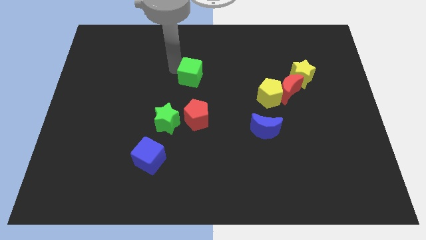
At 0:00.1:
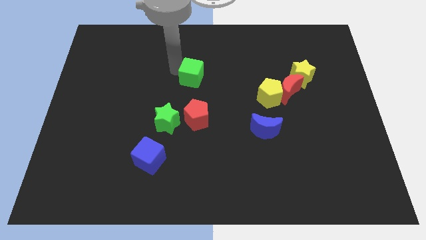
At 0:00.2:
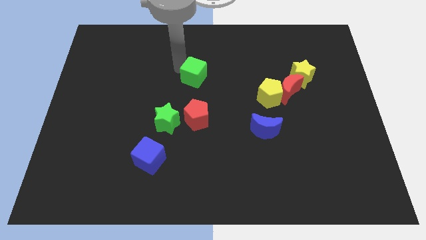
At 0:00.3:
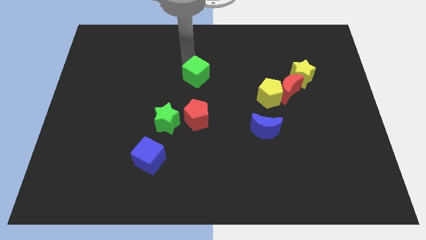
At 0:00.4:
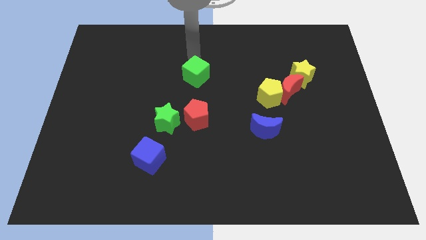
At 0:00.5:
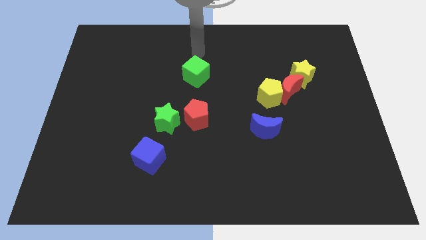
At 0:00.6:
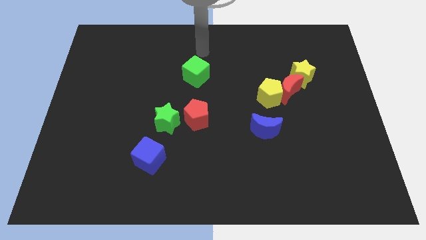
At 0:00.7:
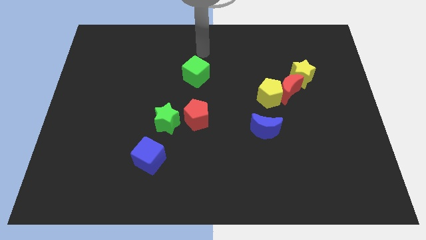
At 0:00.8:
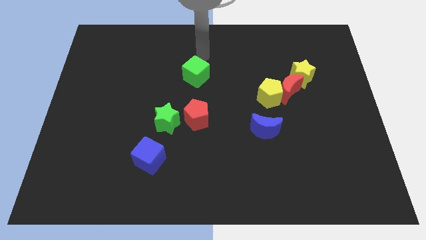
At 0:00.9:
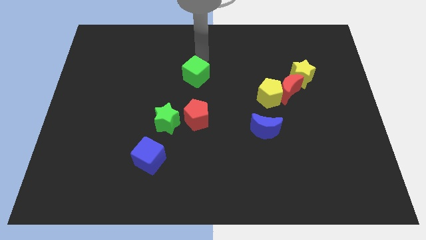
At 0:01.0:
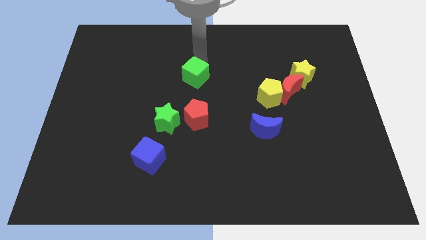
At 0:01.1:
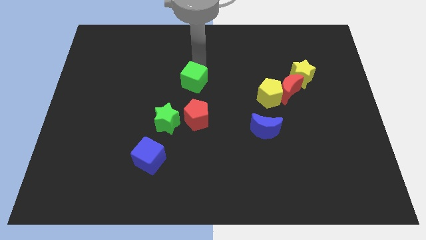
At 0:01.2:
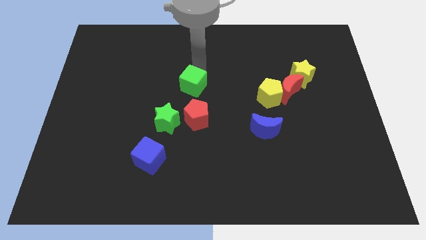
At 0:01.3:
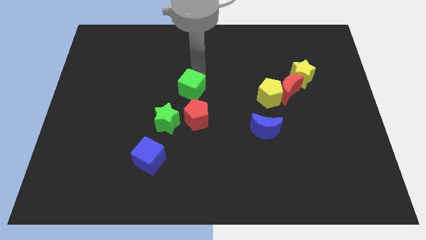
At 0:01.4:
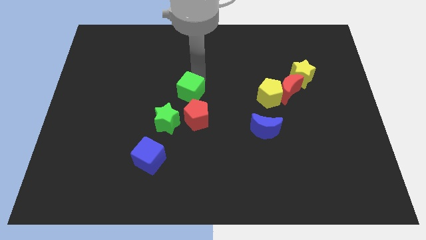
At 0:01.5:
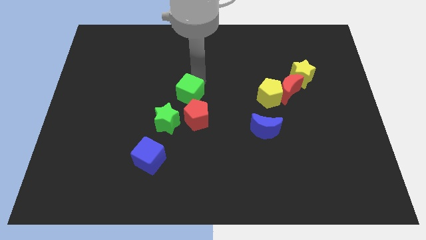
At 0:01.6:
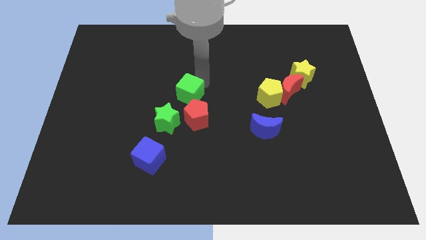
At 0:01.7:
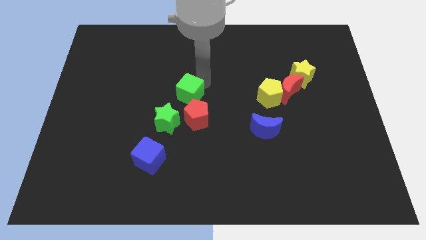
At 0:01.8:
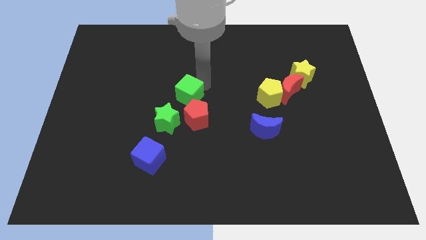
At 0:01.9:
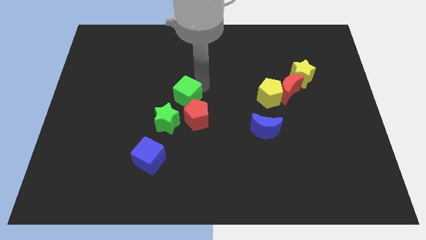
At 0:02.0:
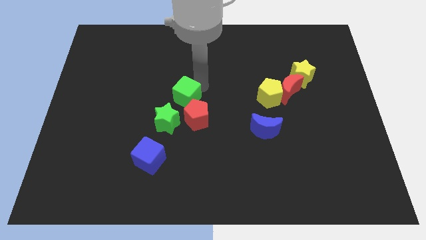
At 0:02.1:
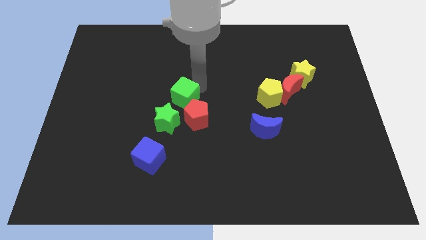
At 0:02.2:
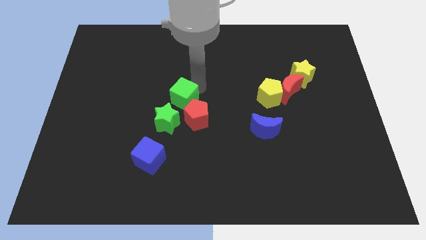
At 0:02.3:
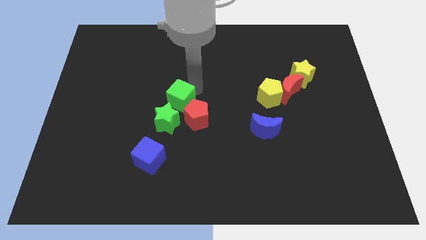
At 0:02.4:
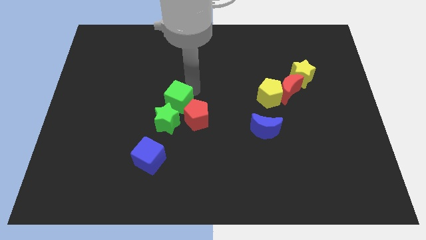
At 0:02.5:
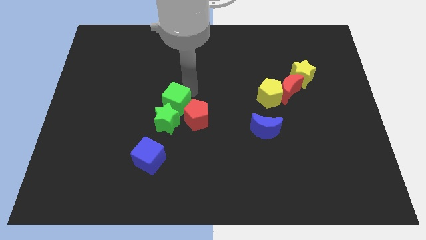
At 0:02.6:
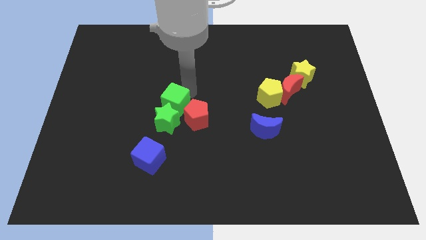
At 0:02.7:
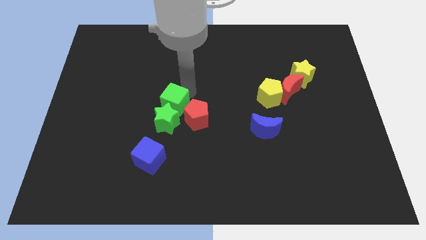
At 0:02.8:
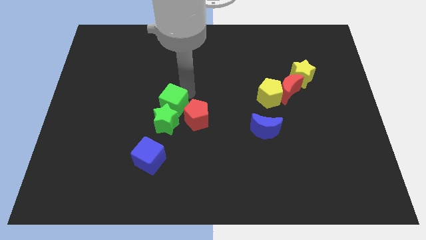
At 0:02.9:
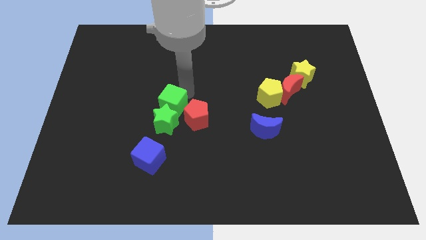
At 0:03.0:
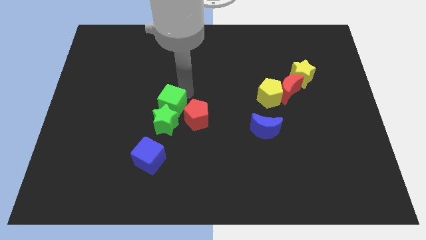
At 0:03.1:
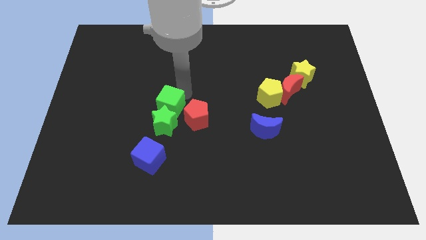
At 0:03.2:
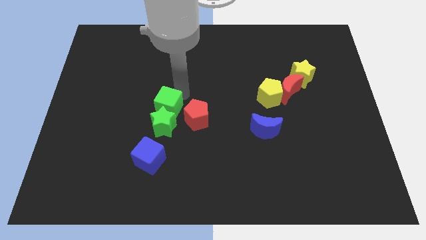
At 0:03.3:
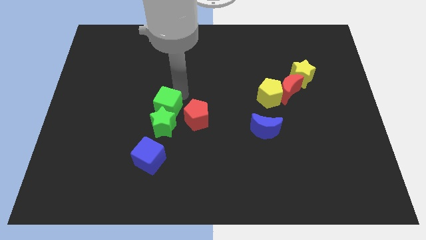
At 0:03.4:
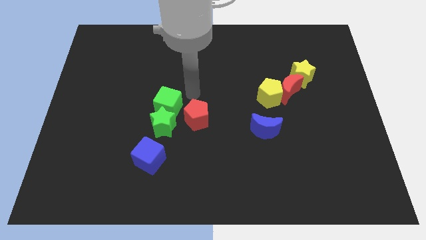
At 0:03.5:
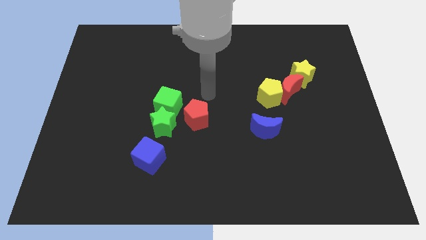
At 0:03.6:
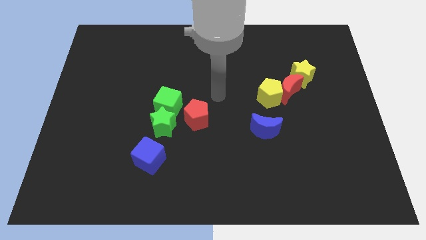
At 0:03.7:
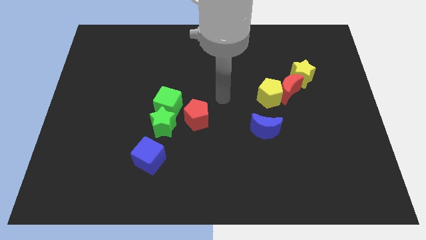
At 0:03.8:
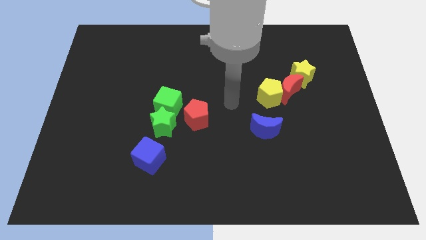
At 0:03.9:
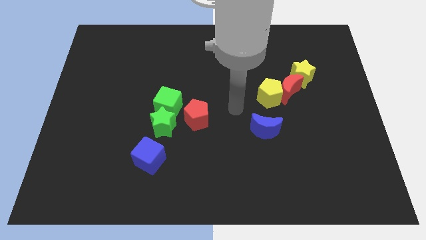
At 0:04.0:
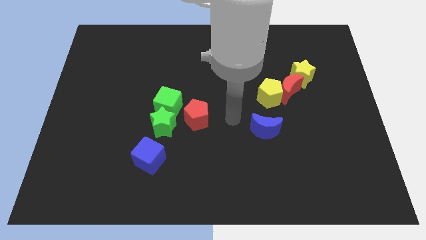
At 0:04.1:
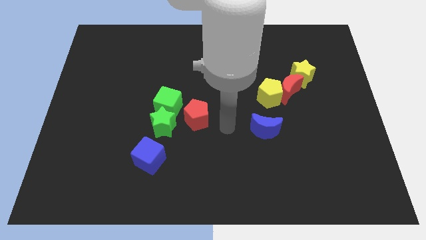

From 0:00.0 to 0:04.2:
place green cube above the green star

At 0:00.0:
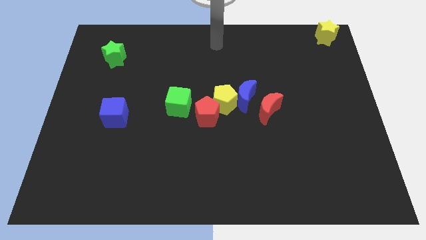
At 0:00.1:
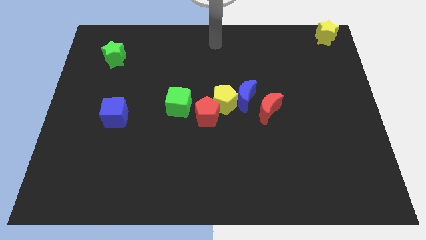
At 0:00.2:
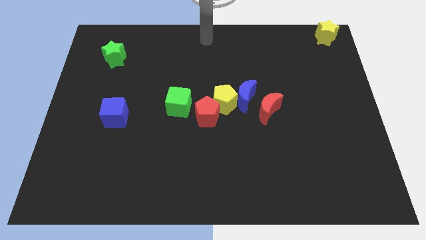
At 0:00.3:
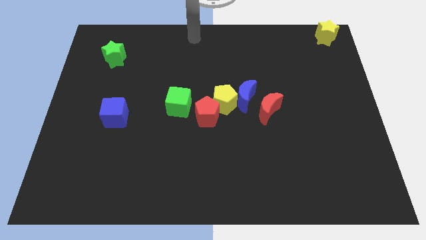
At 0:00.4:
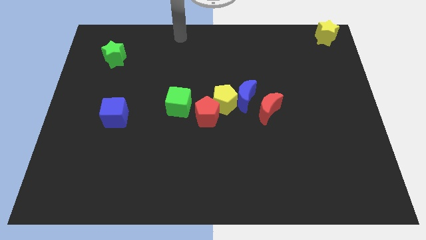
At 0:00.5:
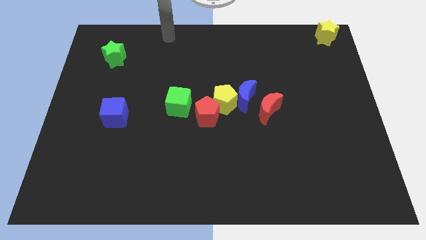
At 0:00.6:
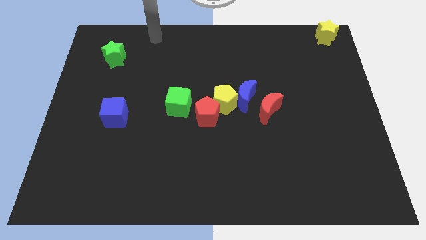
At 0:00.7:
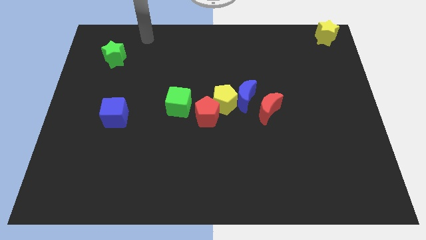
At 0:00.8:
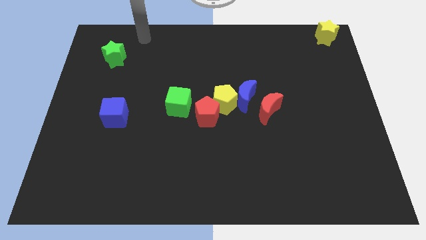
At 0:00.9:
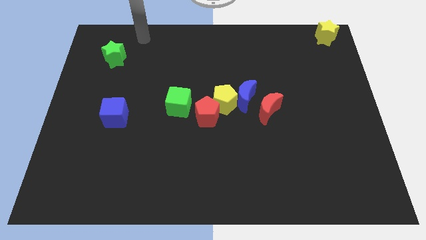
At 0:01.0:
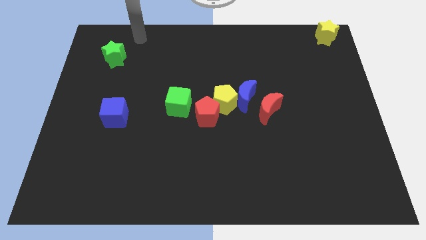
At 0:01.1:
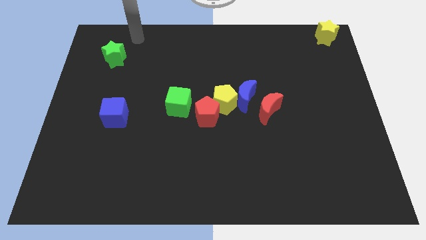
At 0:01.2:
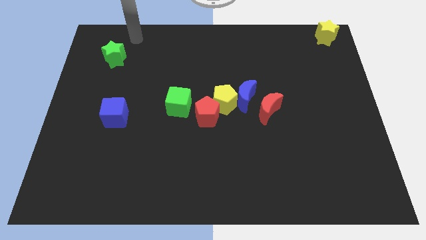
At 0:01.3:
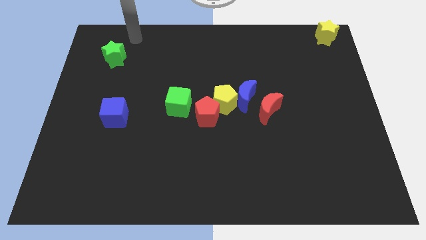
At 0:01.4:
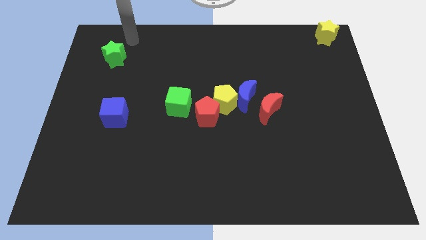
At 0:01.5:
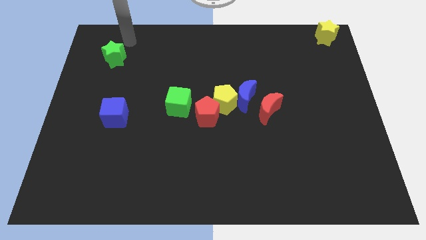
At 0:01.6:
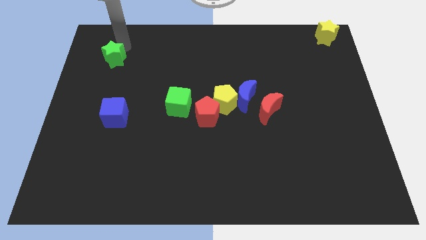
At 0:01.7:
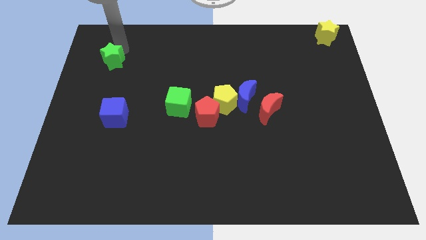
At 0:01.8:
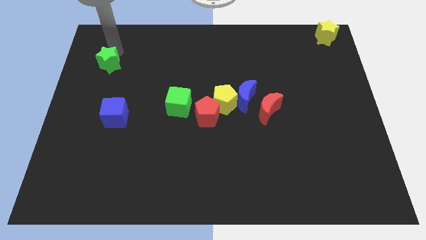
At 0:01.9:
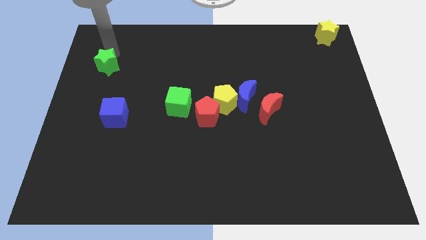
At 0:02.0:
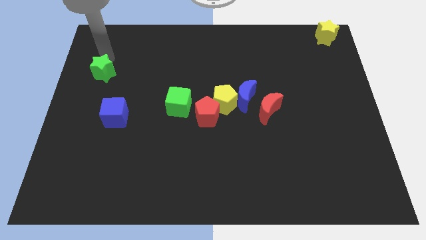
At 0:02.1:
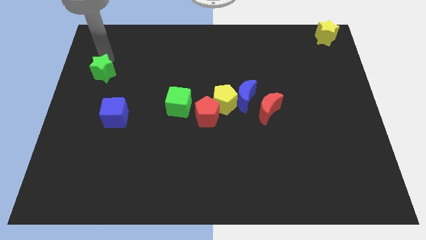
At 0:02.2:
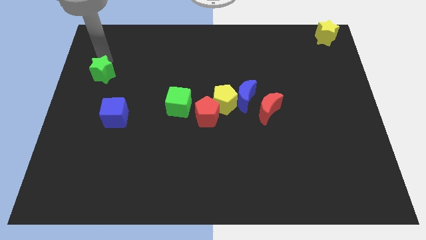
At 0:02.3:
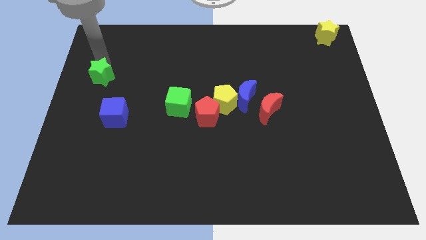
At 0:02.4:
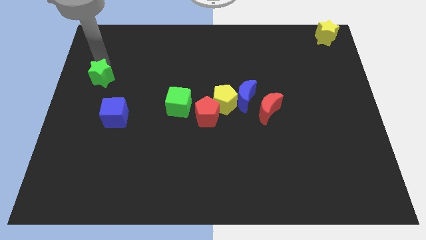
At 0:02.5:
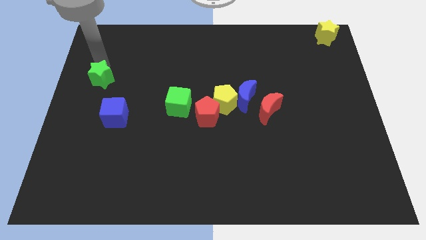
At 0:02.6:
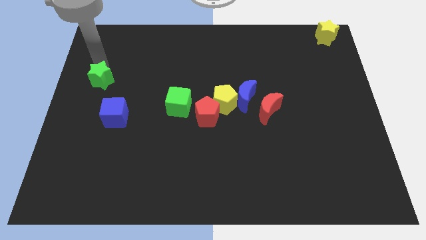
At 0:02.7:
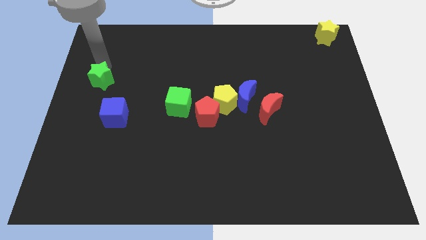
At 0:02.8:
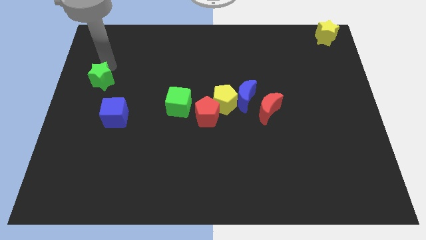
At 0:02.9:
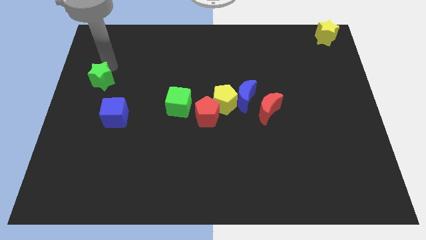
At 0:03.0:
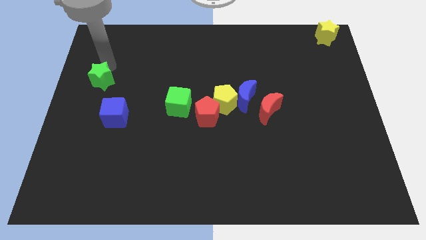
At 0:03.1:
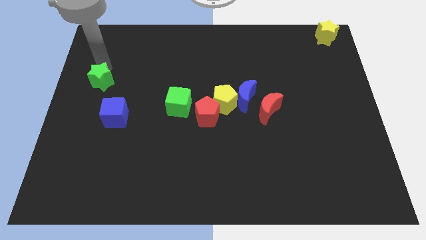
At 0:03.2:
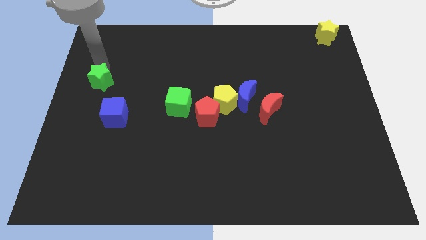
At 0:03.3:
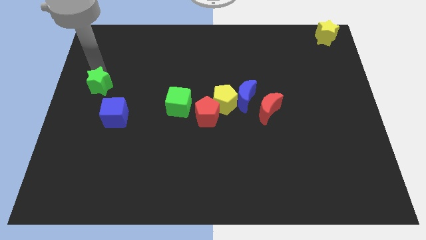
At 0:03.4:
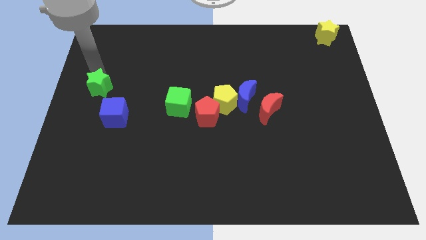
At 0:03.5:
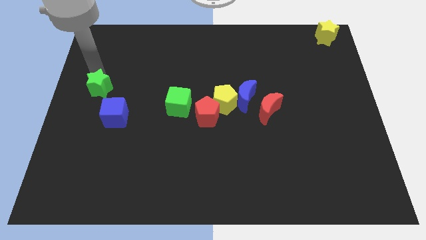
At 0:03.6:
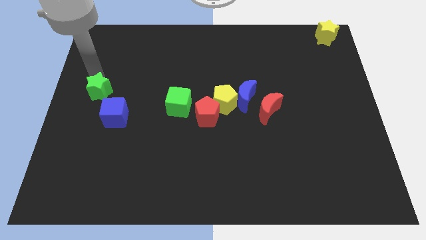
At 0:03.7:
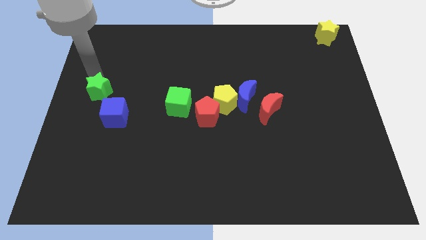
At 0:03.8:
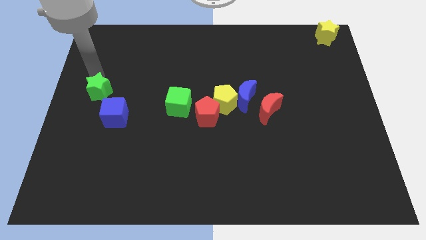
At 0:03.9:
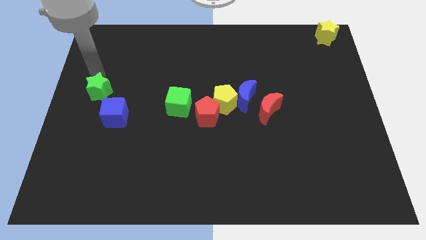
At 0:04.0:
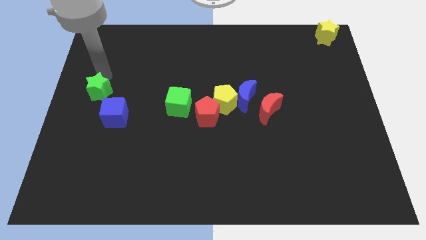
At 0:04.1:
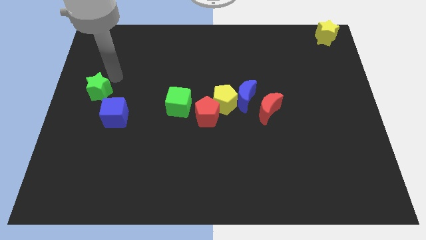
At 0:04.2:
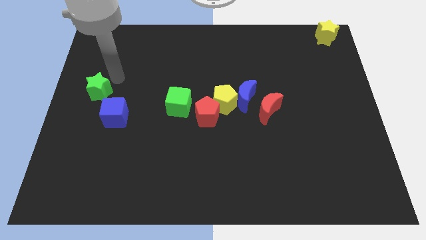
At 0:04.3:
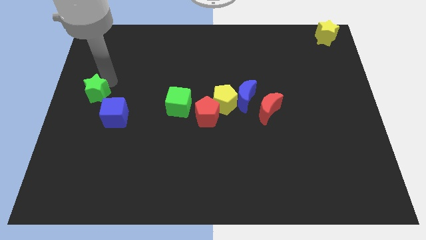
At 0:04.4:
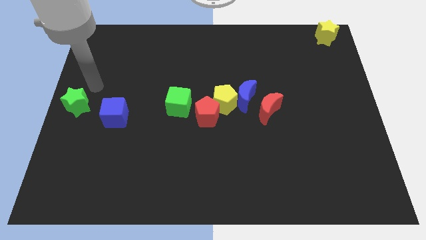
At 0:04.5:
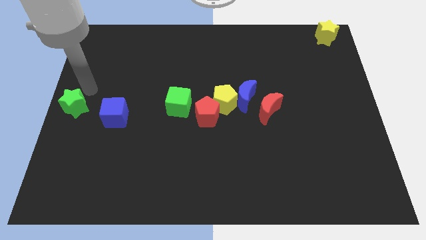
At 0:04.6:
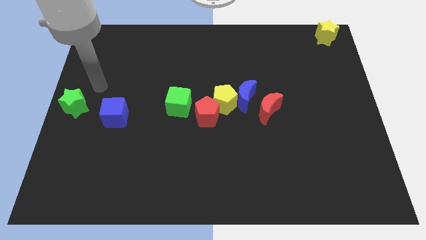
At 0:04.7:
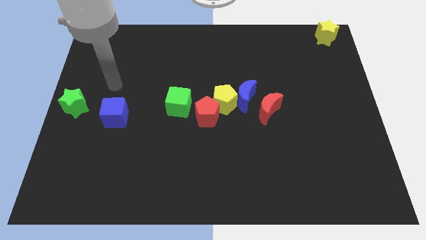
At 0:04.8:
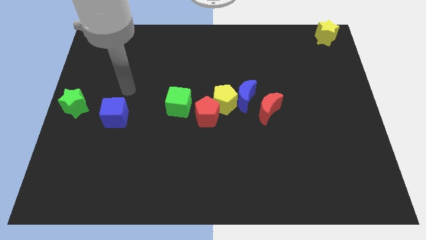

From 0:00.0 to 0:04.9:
move green star to the left of blue cube
